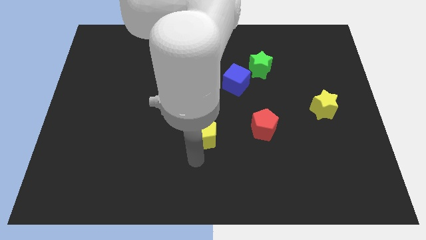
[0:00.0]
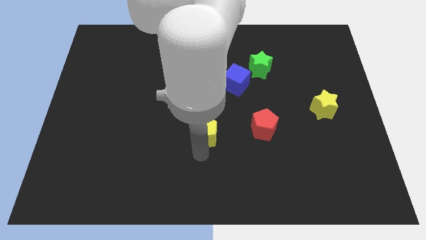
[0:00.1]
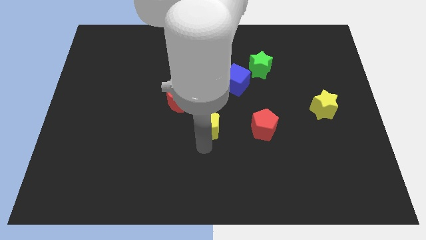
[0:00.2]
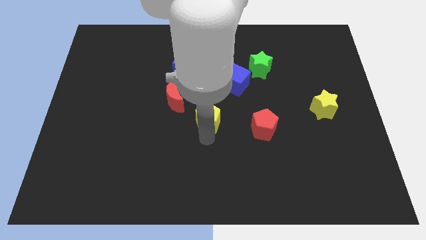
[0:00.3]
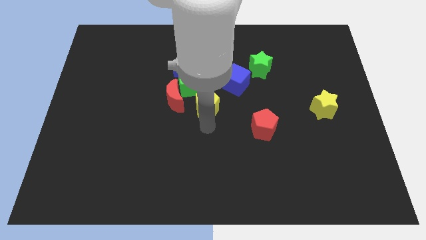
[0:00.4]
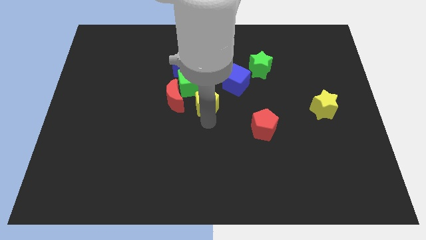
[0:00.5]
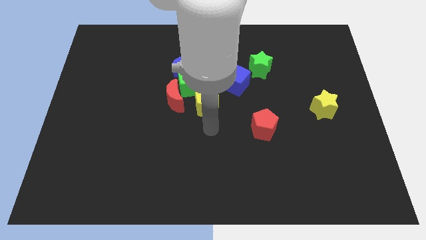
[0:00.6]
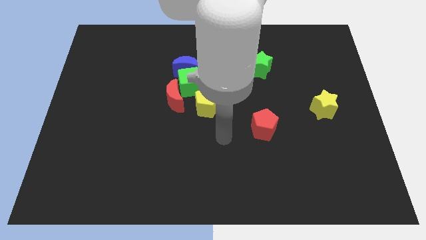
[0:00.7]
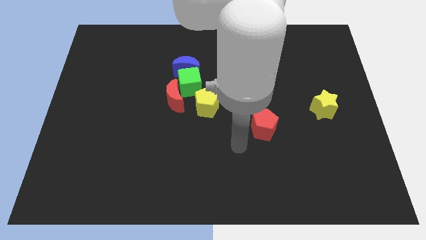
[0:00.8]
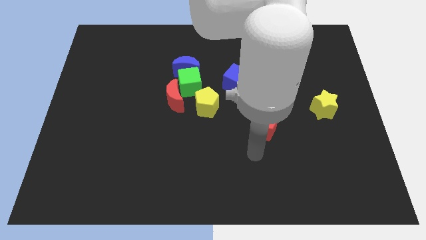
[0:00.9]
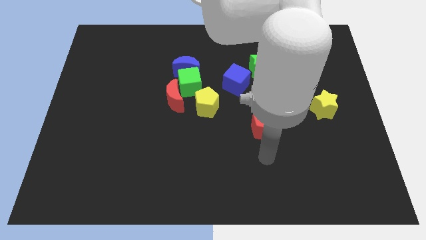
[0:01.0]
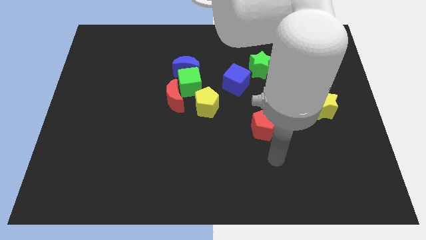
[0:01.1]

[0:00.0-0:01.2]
push the yellow pentagon close to the green cube

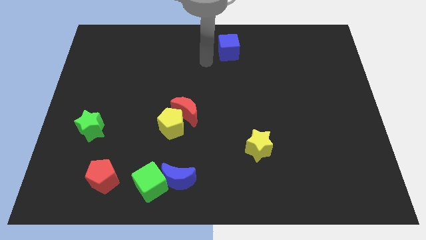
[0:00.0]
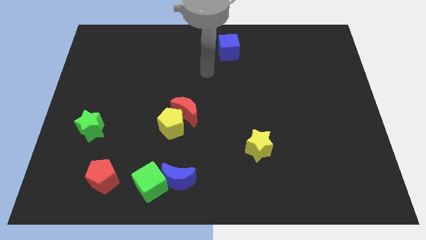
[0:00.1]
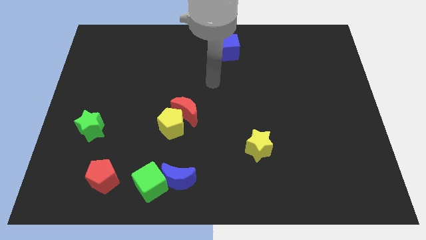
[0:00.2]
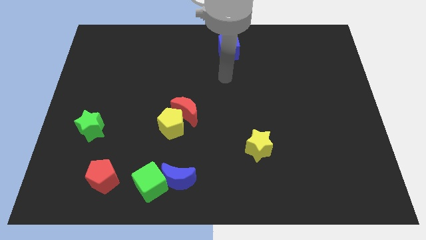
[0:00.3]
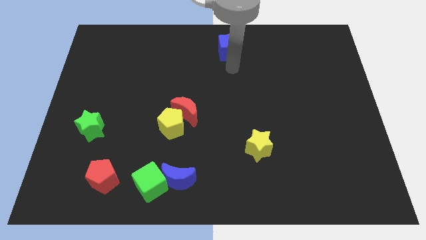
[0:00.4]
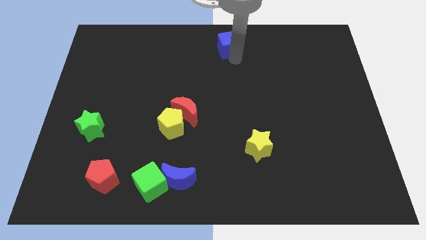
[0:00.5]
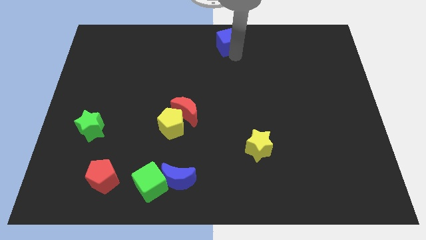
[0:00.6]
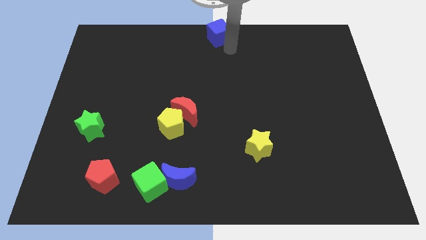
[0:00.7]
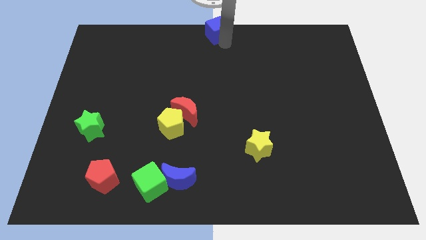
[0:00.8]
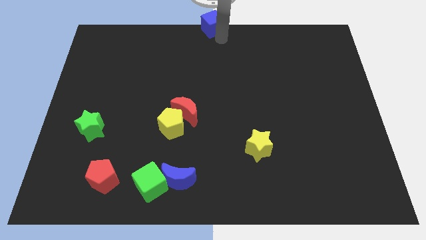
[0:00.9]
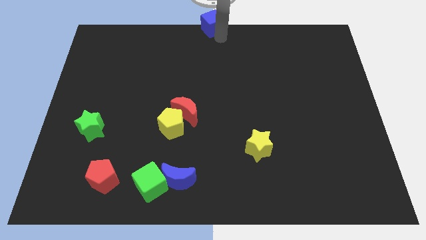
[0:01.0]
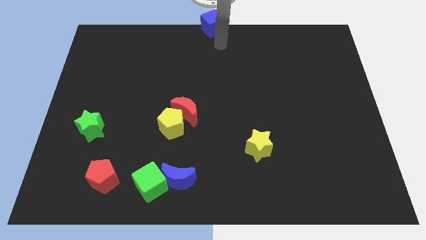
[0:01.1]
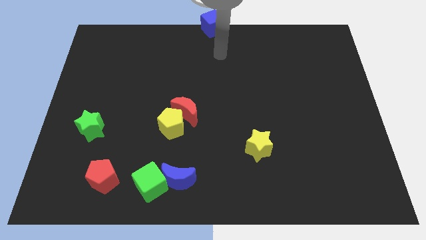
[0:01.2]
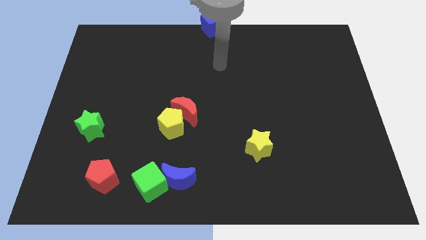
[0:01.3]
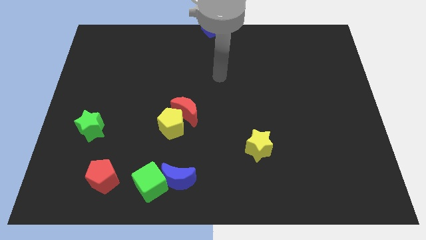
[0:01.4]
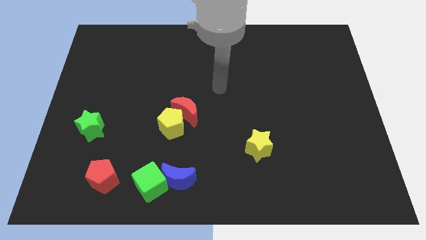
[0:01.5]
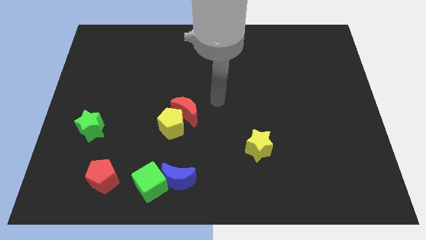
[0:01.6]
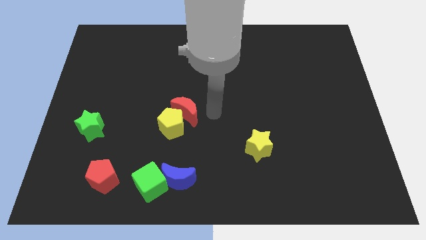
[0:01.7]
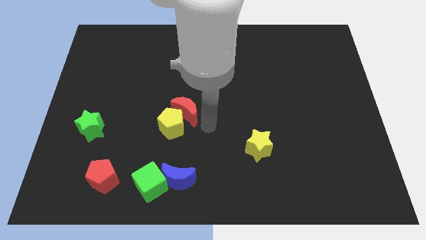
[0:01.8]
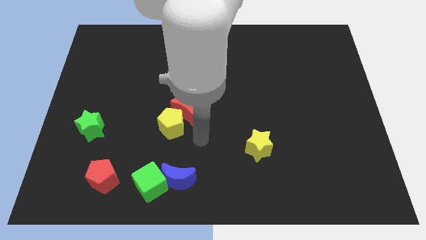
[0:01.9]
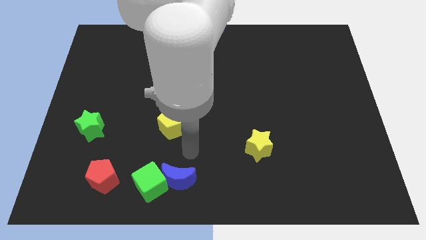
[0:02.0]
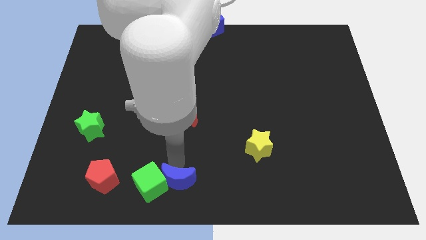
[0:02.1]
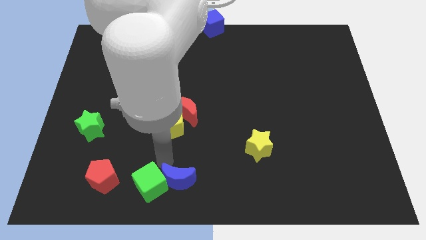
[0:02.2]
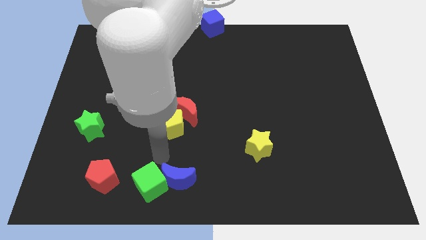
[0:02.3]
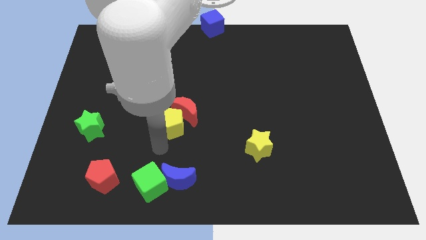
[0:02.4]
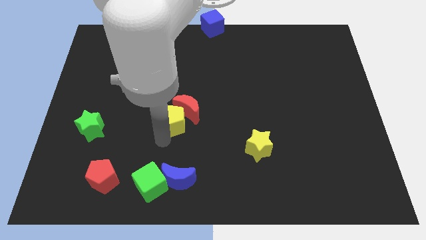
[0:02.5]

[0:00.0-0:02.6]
place the arm down to the yellow pentagon

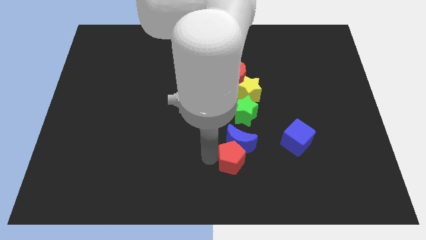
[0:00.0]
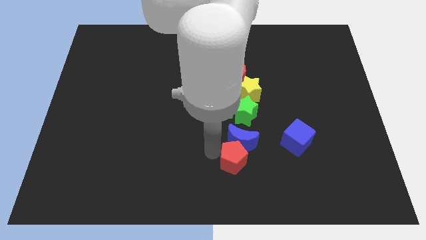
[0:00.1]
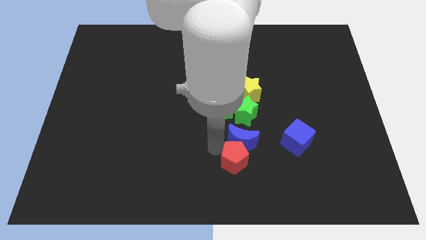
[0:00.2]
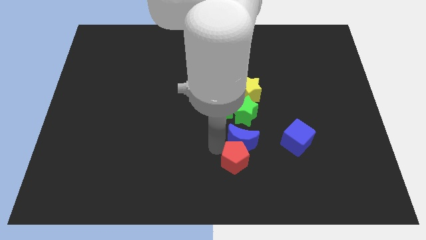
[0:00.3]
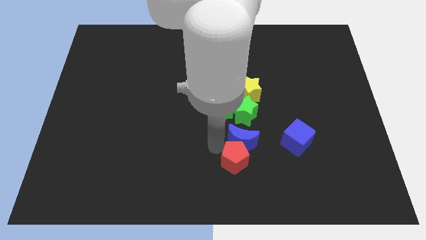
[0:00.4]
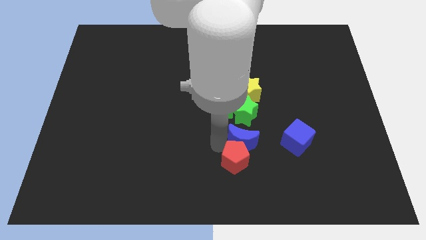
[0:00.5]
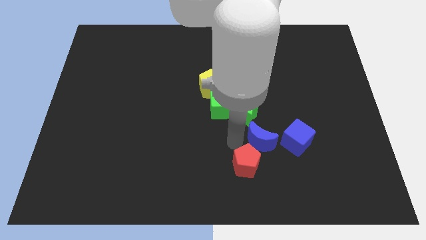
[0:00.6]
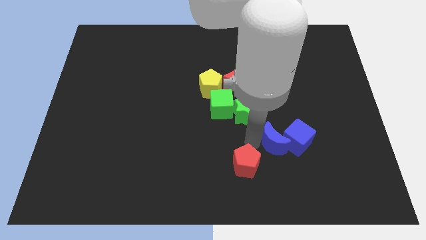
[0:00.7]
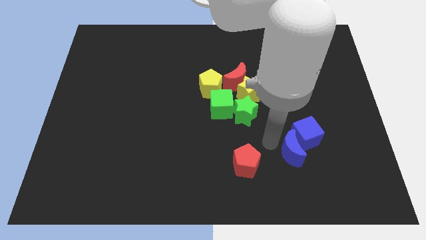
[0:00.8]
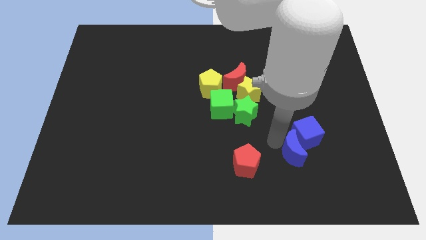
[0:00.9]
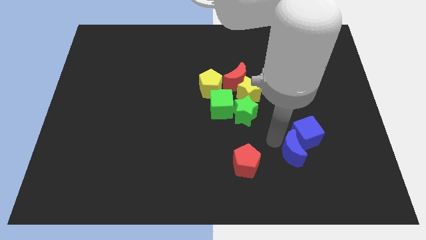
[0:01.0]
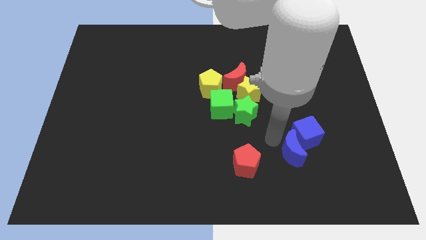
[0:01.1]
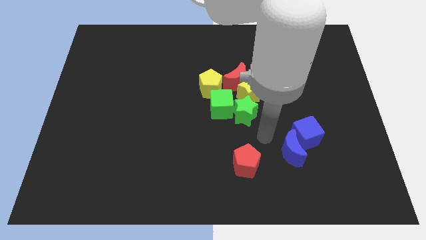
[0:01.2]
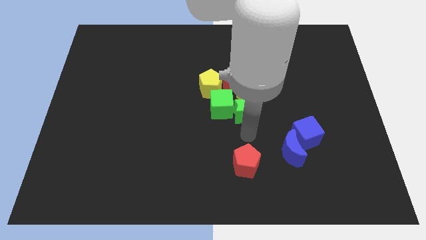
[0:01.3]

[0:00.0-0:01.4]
push the blue crescent close left to the blue cube

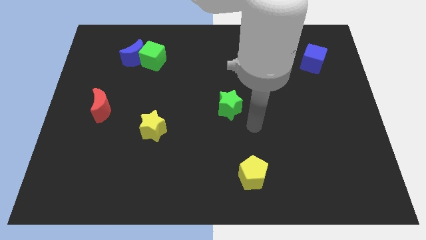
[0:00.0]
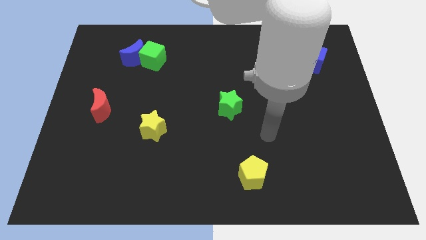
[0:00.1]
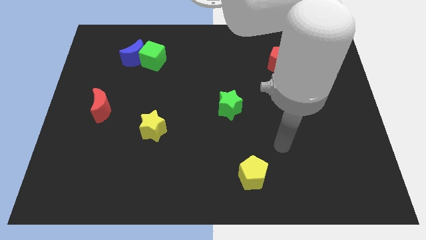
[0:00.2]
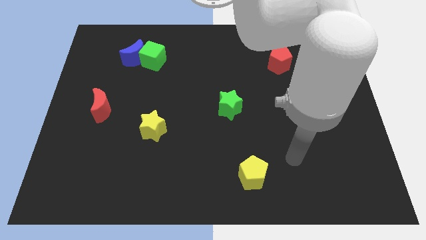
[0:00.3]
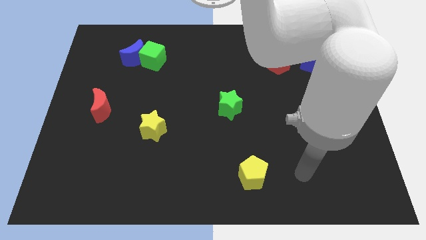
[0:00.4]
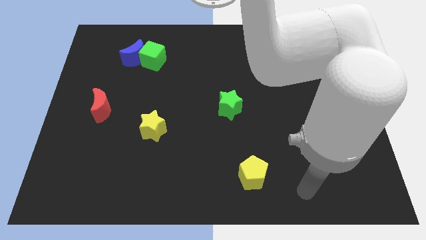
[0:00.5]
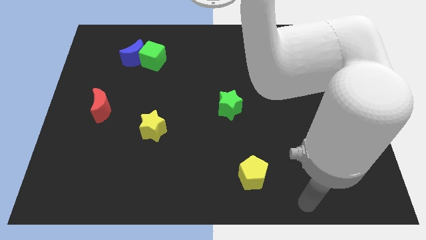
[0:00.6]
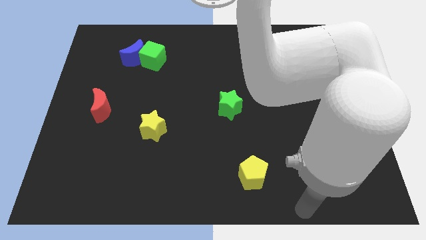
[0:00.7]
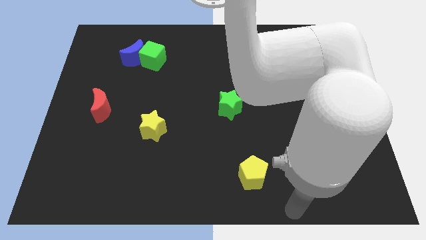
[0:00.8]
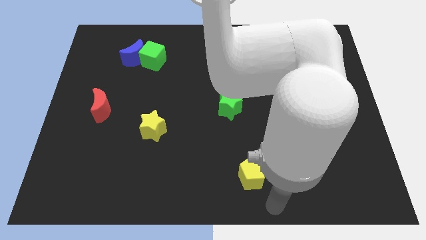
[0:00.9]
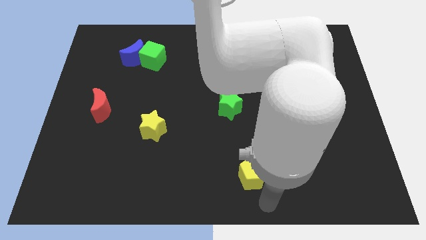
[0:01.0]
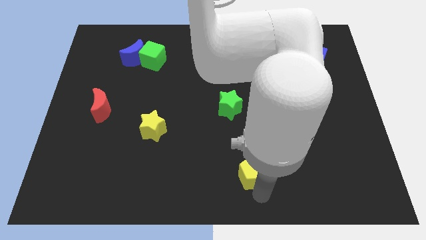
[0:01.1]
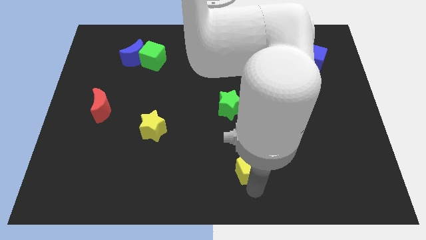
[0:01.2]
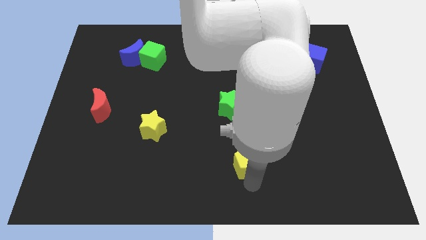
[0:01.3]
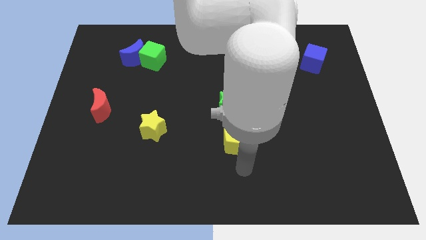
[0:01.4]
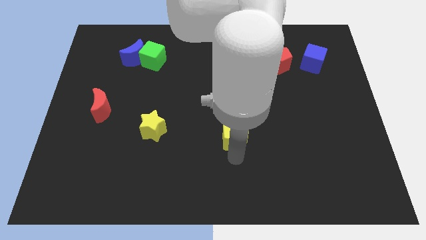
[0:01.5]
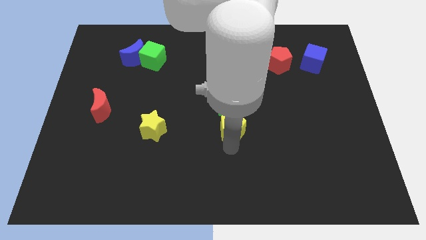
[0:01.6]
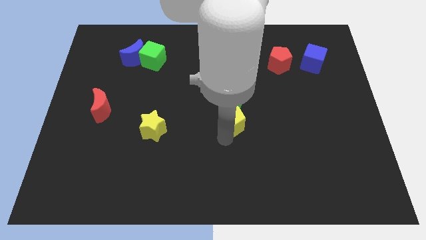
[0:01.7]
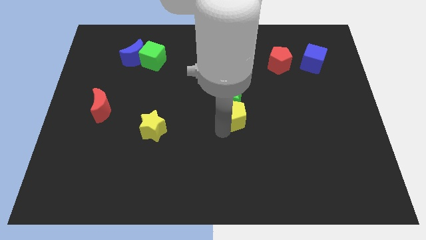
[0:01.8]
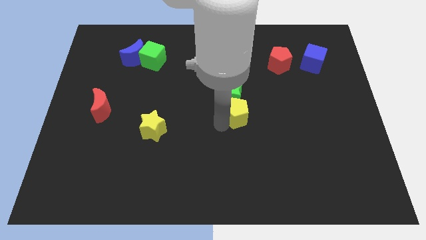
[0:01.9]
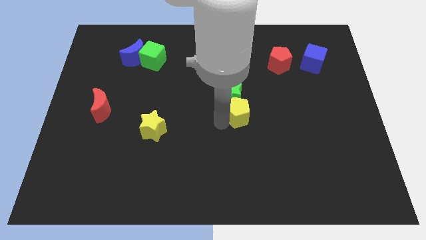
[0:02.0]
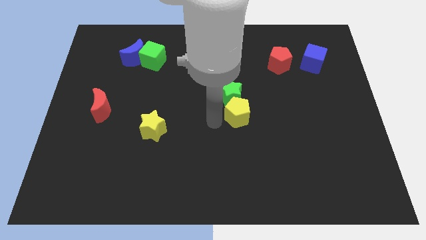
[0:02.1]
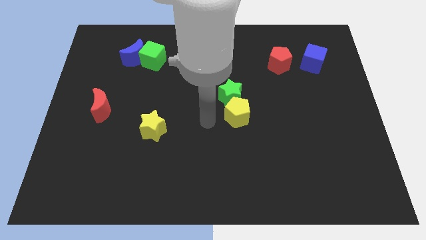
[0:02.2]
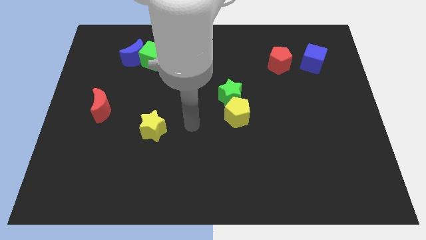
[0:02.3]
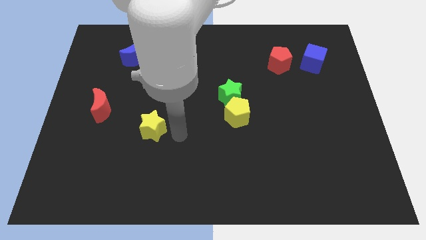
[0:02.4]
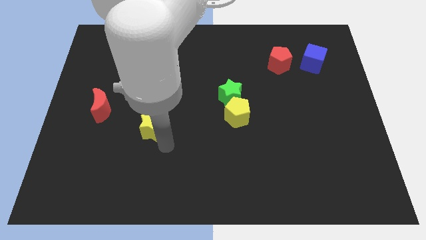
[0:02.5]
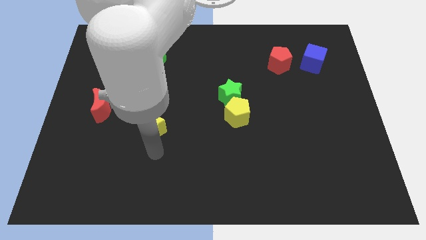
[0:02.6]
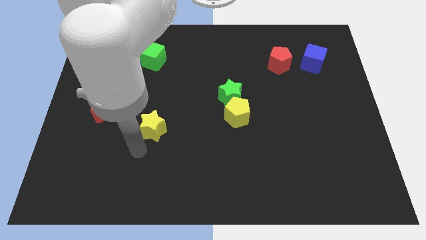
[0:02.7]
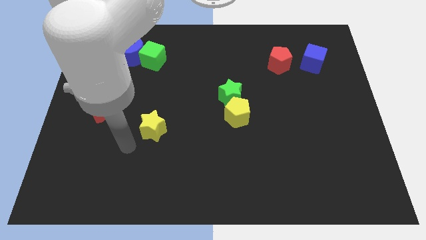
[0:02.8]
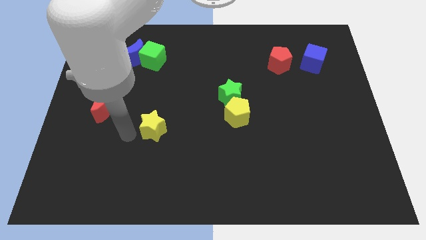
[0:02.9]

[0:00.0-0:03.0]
slightly move the yellow pentagon below the green star

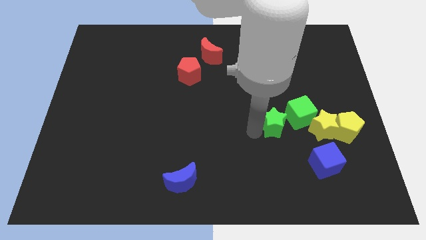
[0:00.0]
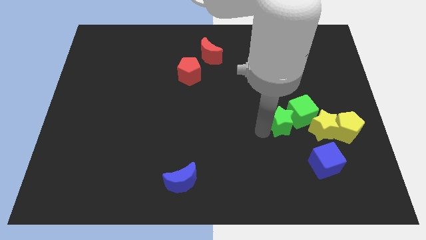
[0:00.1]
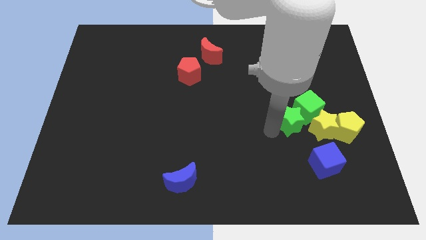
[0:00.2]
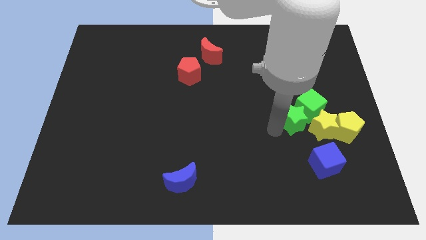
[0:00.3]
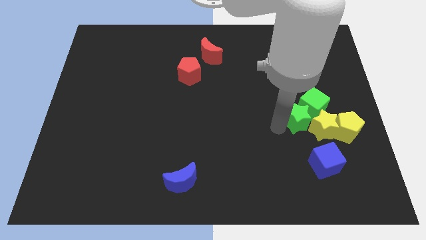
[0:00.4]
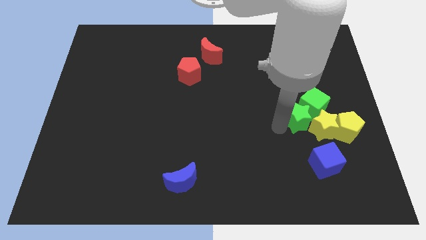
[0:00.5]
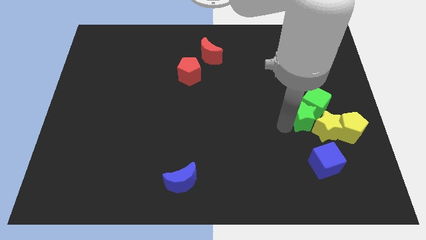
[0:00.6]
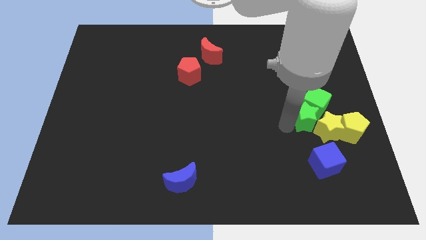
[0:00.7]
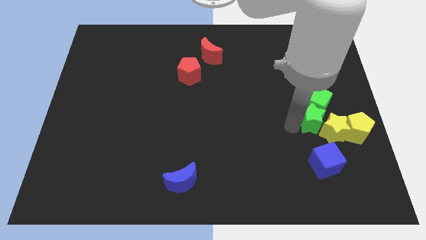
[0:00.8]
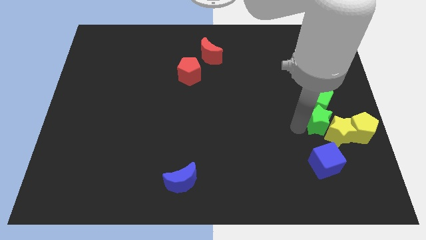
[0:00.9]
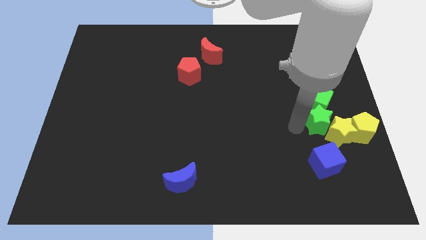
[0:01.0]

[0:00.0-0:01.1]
move green star into the yellow star
